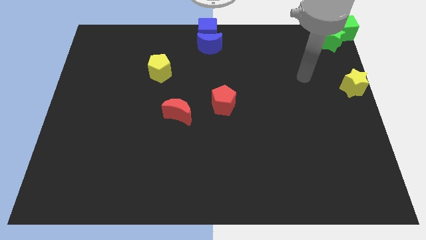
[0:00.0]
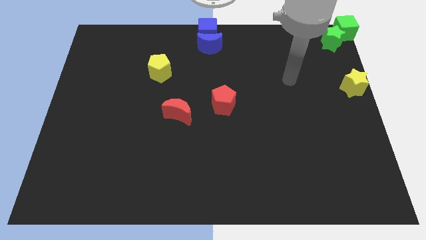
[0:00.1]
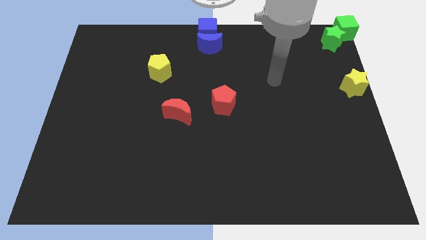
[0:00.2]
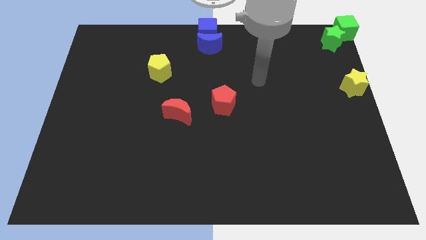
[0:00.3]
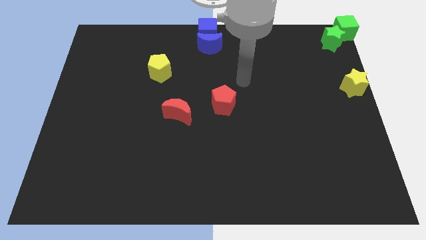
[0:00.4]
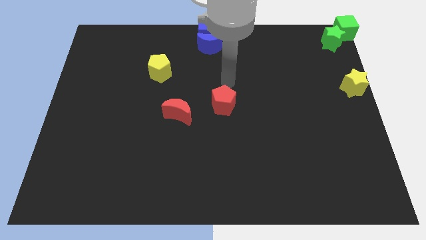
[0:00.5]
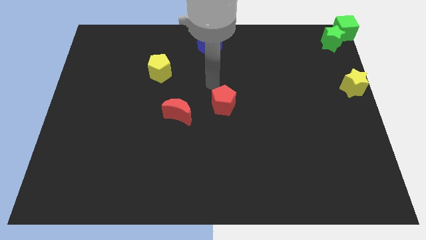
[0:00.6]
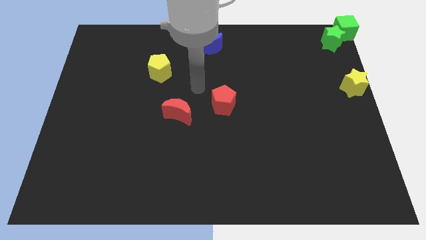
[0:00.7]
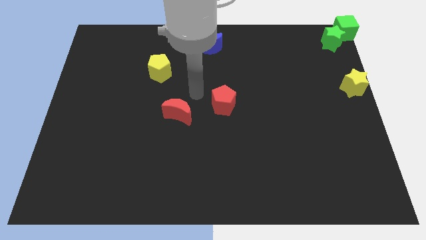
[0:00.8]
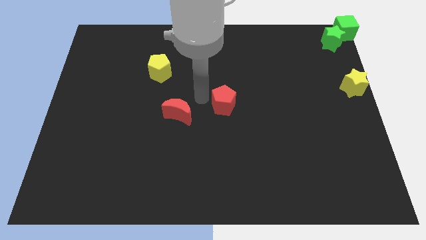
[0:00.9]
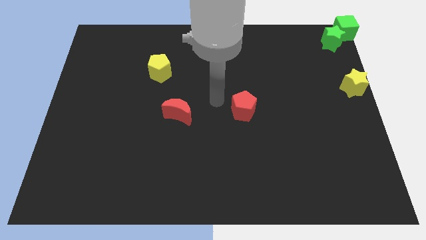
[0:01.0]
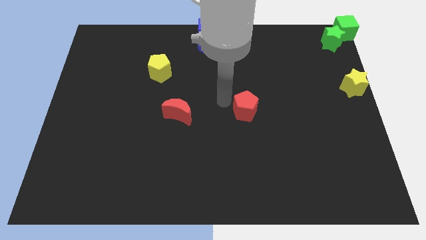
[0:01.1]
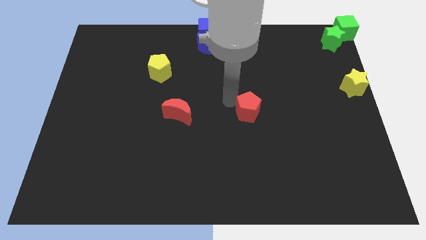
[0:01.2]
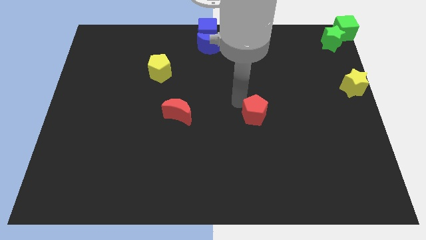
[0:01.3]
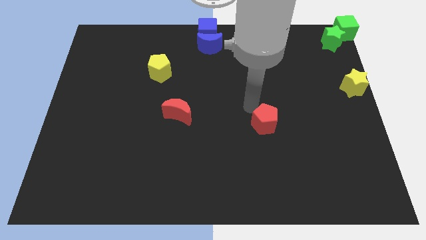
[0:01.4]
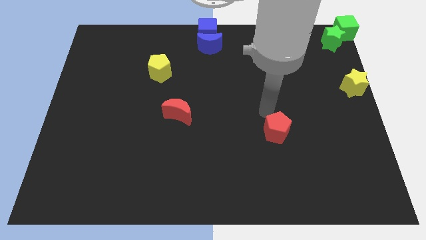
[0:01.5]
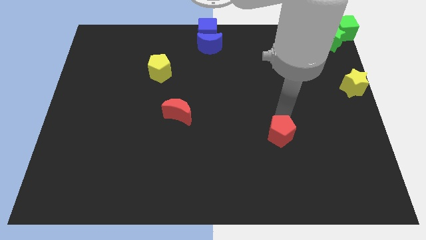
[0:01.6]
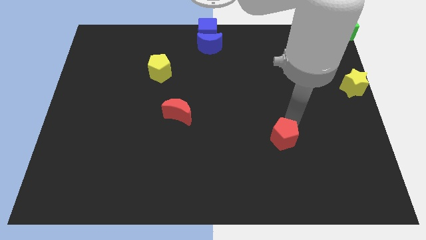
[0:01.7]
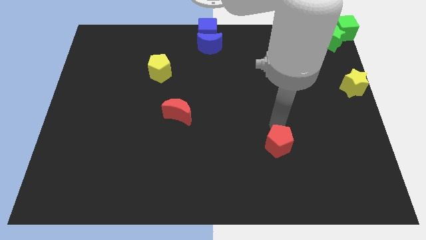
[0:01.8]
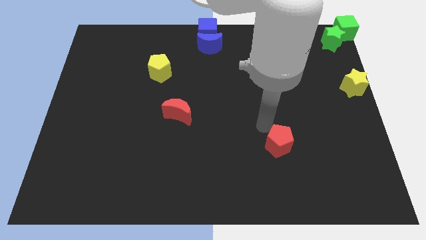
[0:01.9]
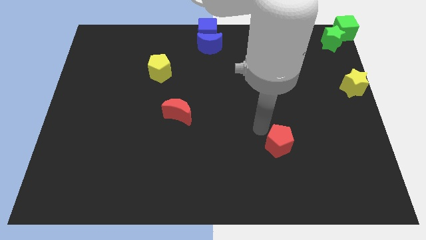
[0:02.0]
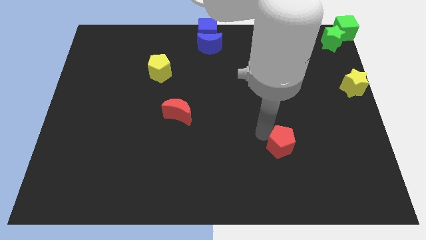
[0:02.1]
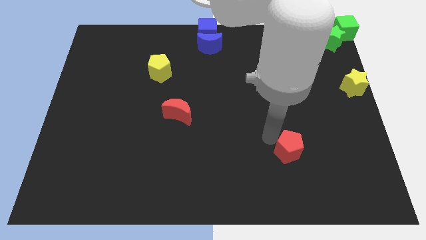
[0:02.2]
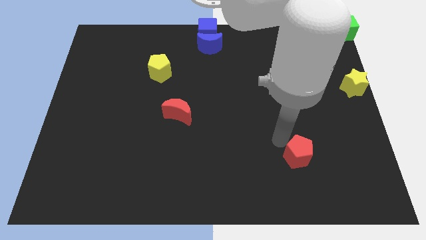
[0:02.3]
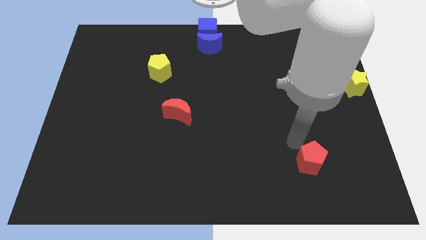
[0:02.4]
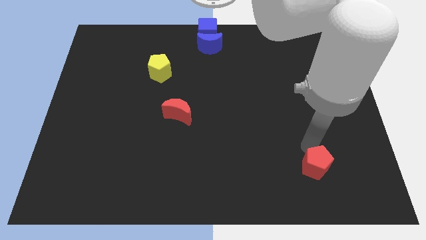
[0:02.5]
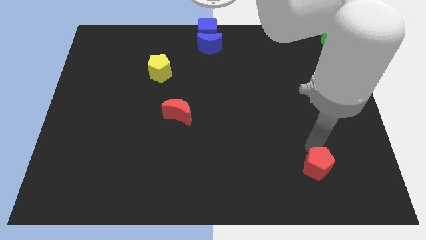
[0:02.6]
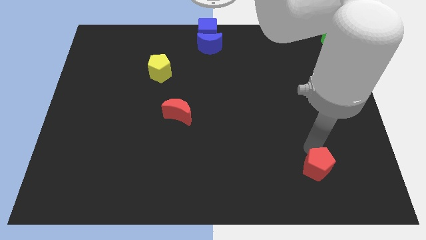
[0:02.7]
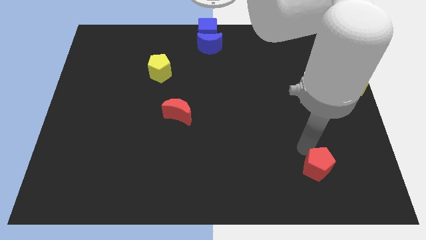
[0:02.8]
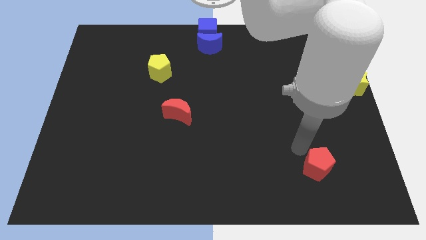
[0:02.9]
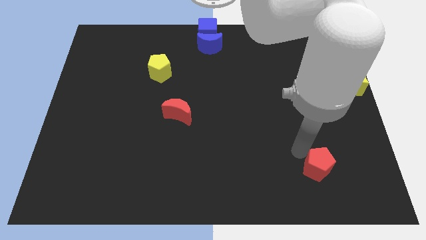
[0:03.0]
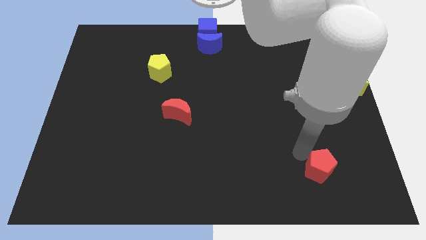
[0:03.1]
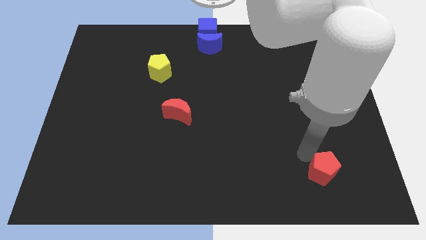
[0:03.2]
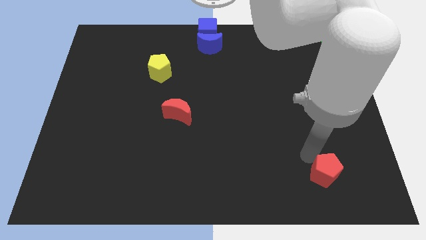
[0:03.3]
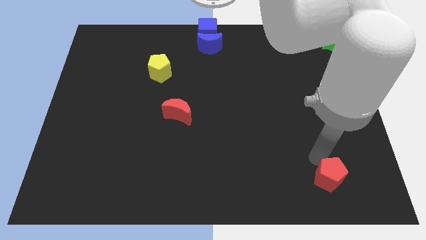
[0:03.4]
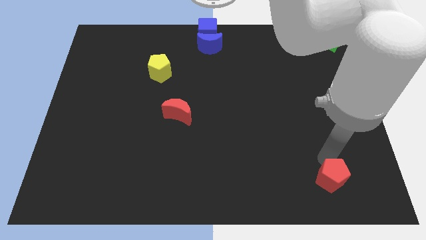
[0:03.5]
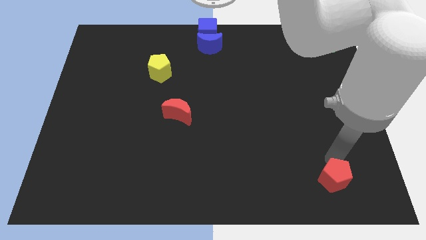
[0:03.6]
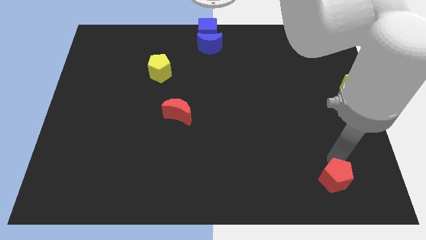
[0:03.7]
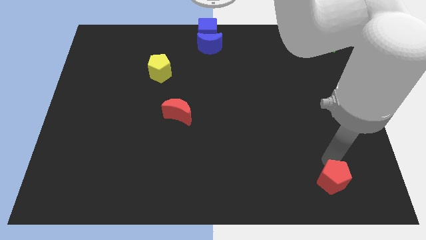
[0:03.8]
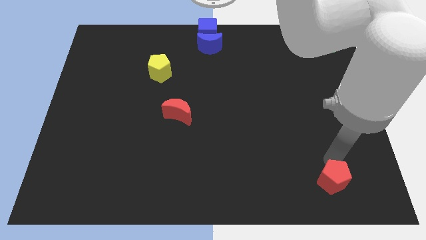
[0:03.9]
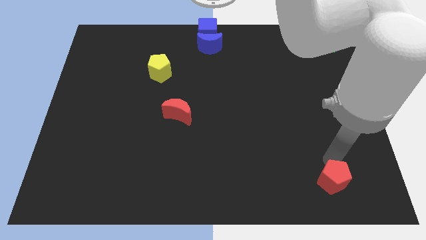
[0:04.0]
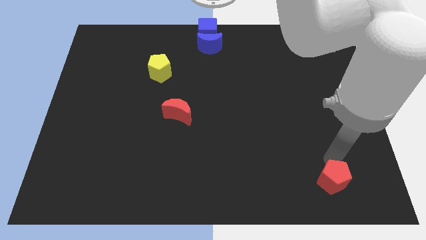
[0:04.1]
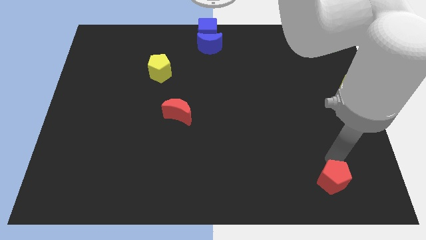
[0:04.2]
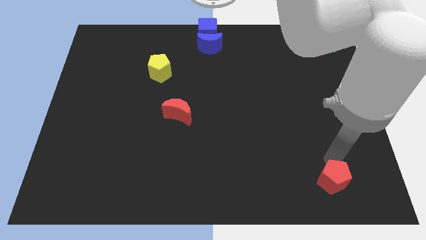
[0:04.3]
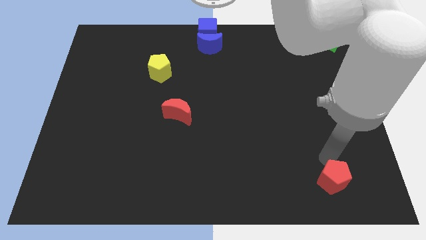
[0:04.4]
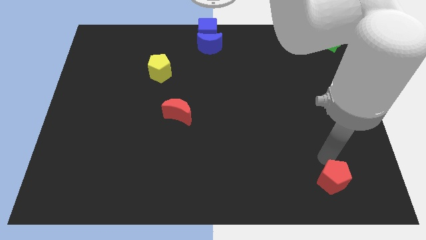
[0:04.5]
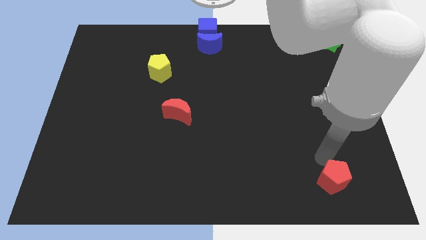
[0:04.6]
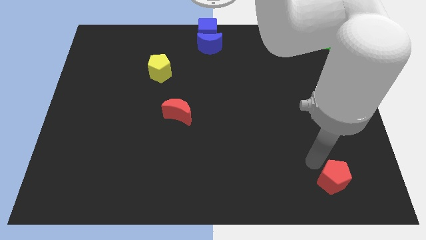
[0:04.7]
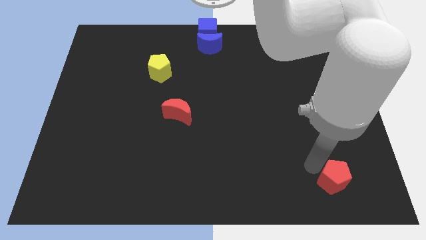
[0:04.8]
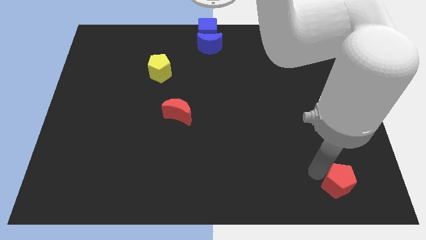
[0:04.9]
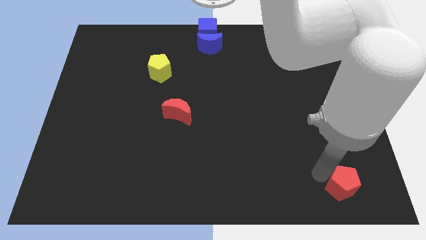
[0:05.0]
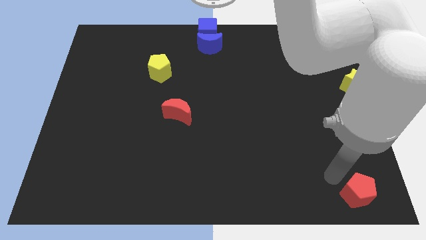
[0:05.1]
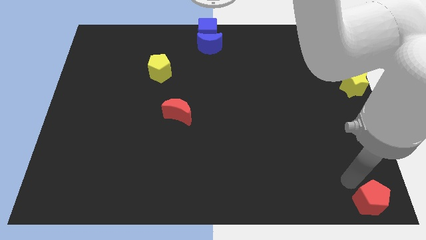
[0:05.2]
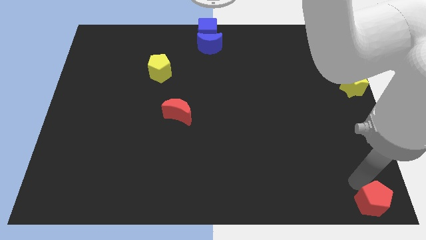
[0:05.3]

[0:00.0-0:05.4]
push the red pentagon to the bottom right corner to the board

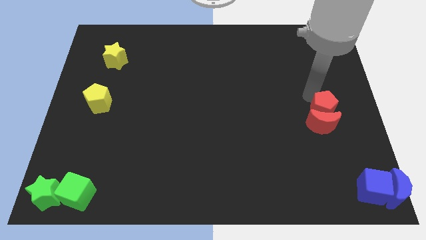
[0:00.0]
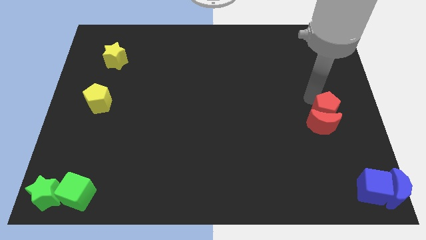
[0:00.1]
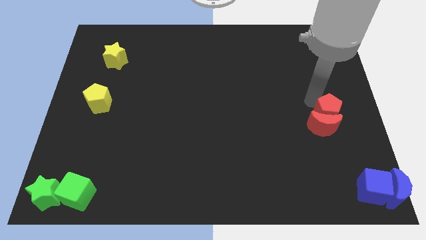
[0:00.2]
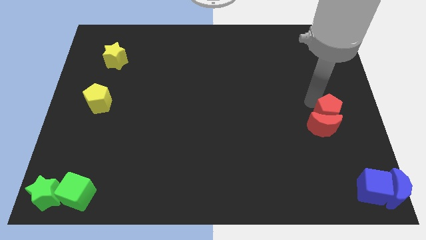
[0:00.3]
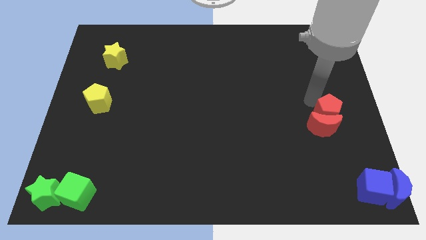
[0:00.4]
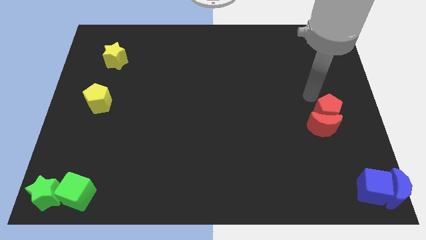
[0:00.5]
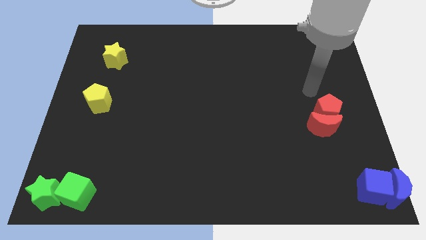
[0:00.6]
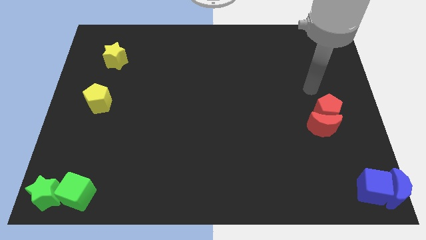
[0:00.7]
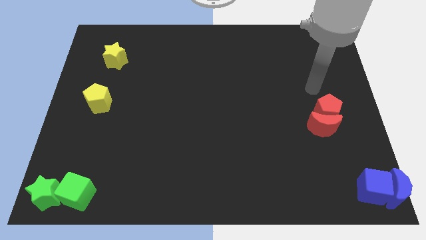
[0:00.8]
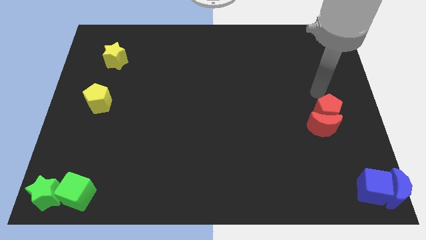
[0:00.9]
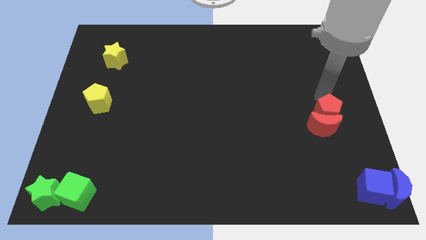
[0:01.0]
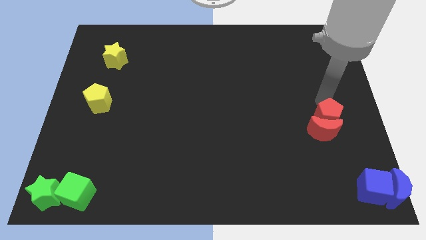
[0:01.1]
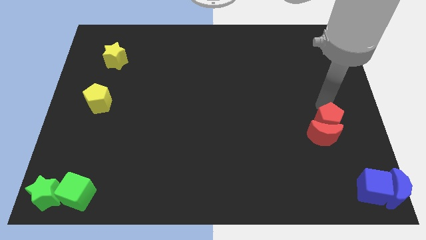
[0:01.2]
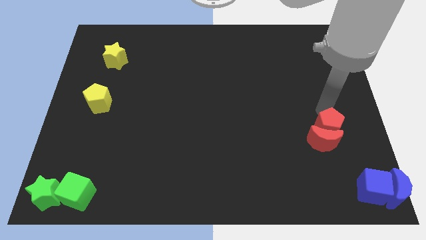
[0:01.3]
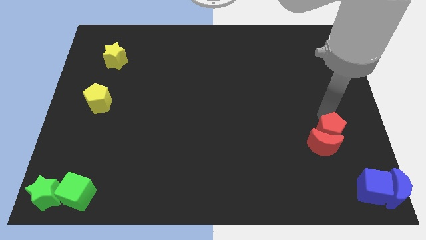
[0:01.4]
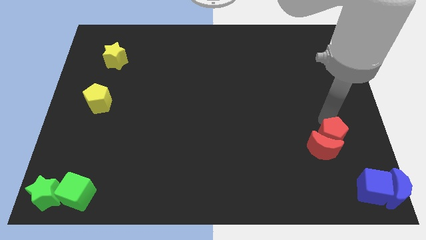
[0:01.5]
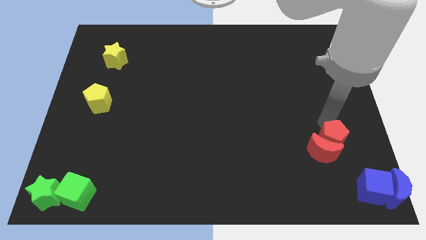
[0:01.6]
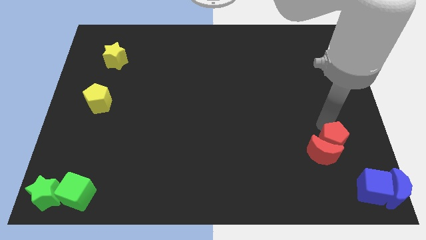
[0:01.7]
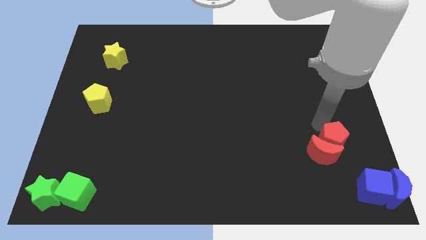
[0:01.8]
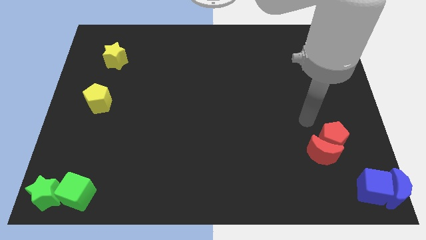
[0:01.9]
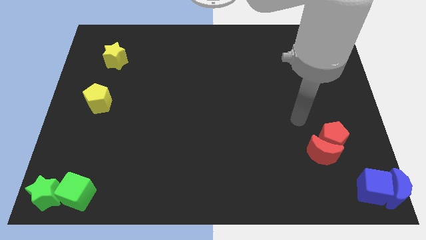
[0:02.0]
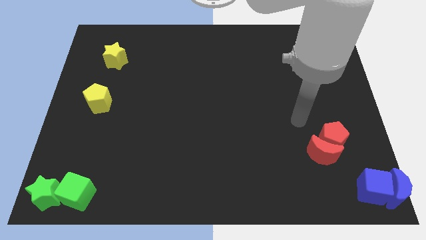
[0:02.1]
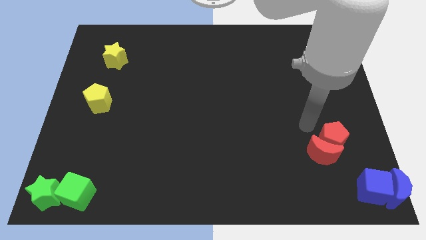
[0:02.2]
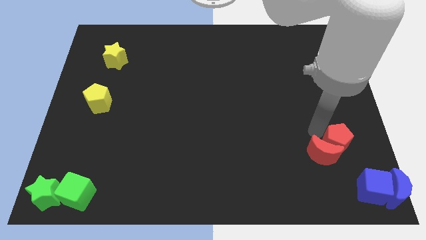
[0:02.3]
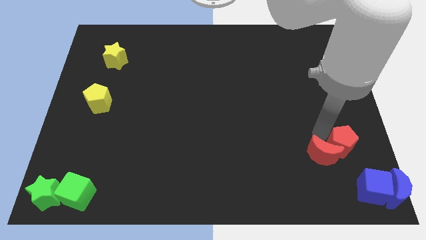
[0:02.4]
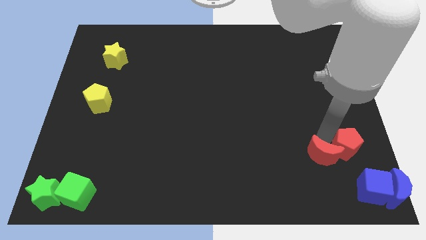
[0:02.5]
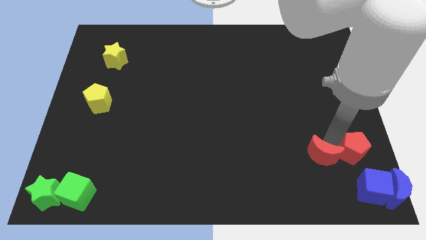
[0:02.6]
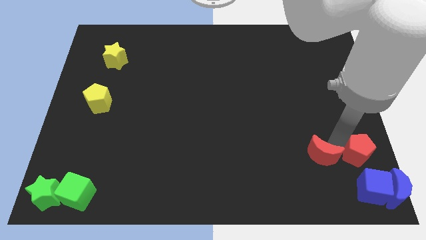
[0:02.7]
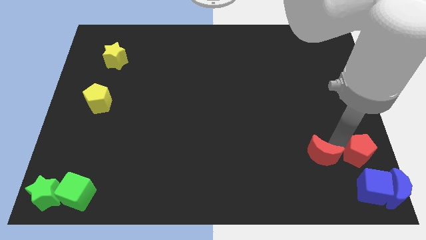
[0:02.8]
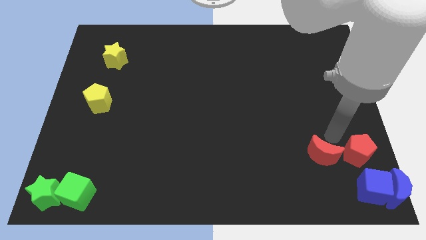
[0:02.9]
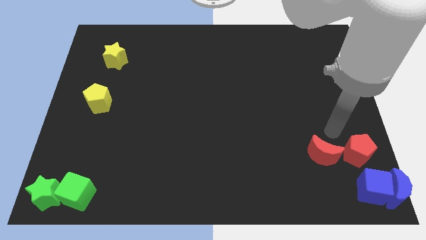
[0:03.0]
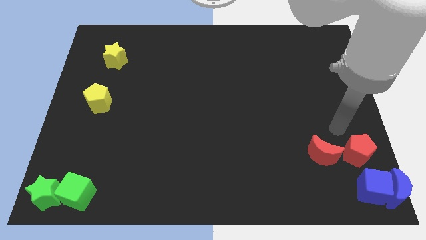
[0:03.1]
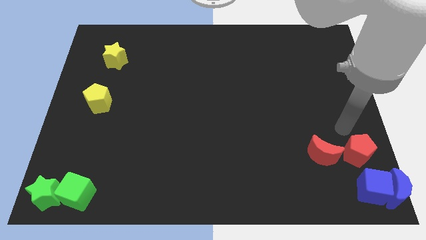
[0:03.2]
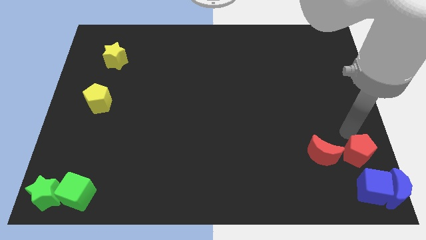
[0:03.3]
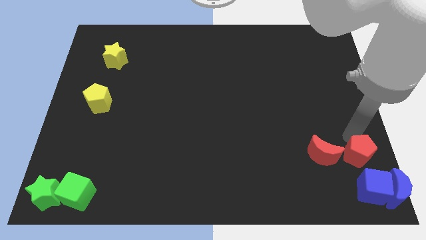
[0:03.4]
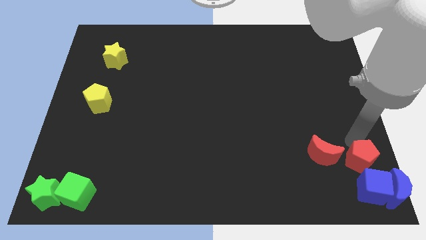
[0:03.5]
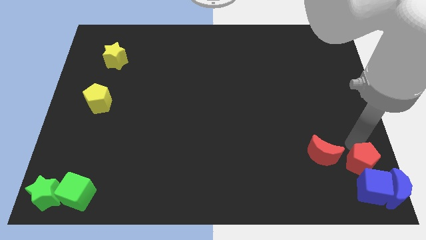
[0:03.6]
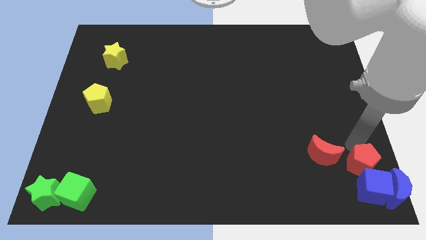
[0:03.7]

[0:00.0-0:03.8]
push red pentagon above blue cube

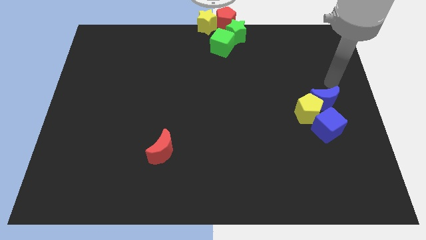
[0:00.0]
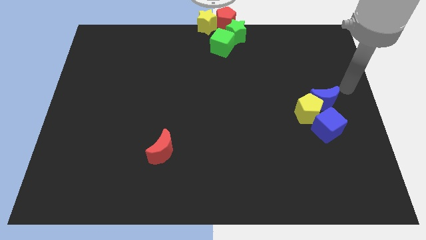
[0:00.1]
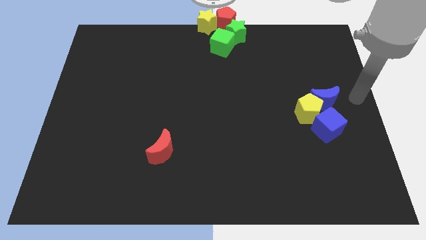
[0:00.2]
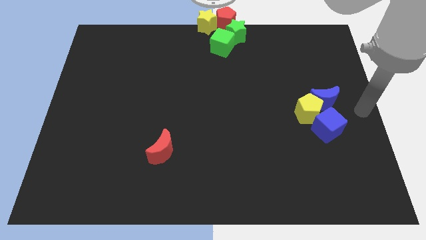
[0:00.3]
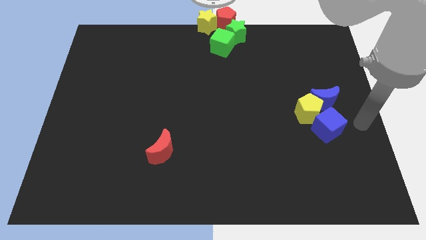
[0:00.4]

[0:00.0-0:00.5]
move your arm right to the blue cube
